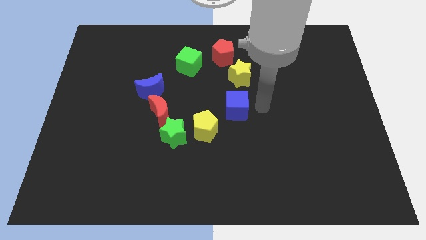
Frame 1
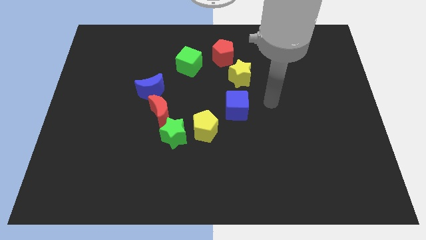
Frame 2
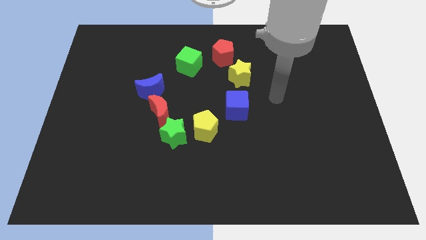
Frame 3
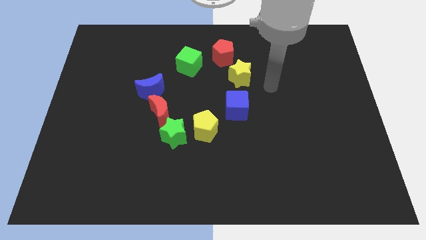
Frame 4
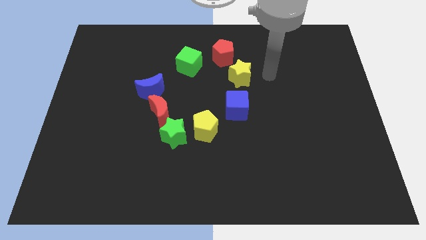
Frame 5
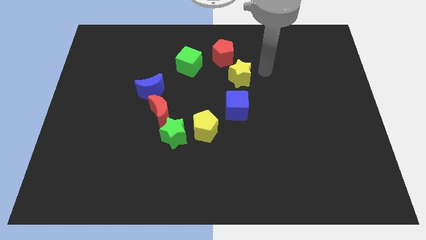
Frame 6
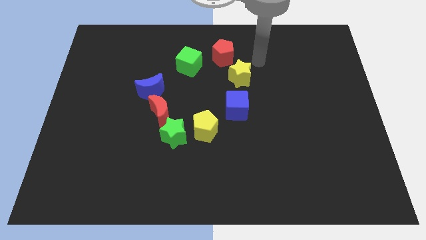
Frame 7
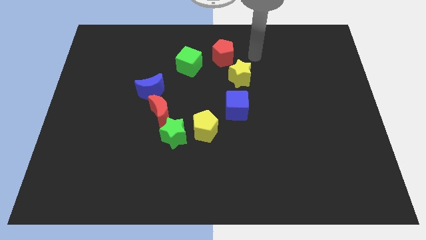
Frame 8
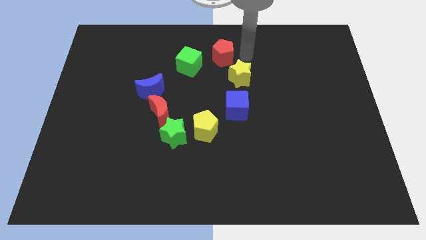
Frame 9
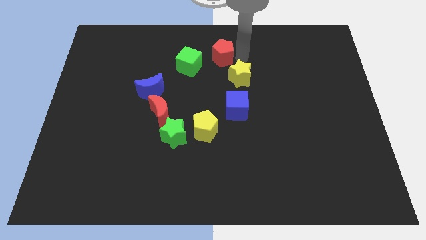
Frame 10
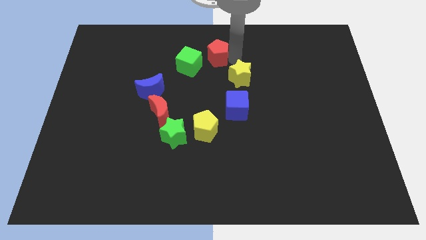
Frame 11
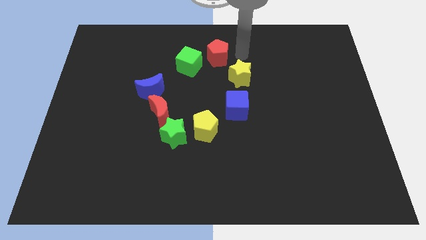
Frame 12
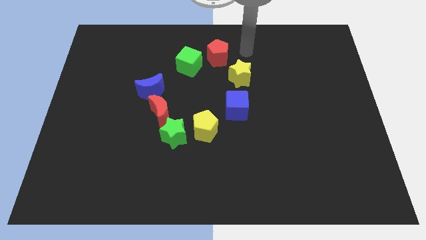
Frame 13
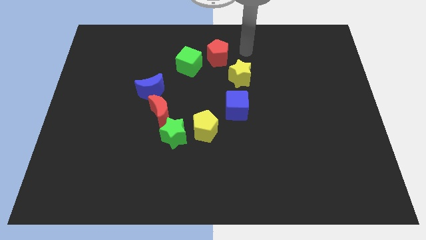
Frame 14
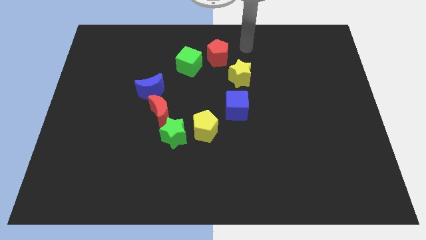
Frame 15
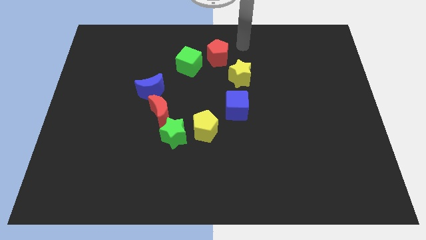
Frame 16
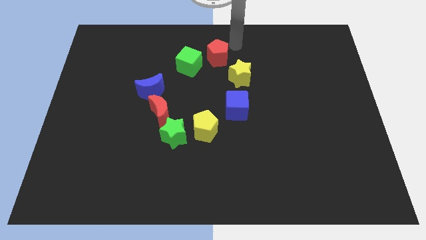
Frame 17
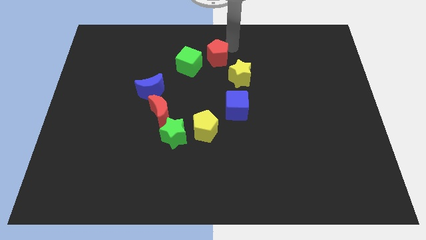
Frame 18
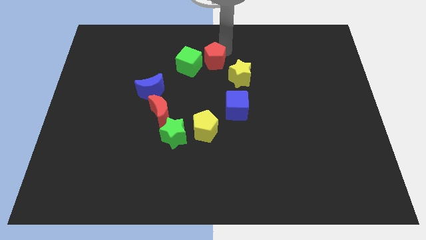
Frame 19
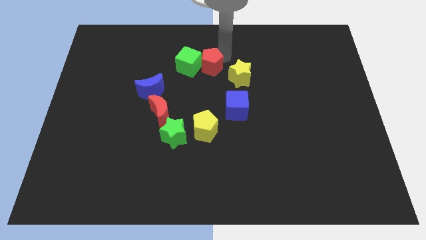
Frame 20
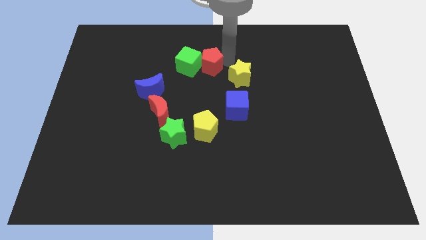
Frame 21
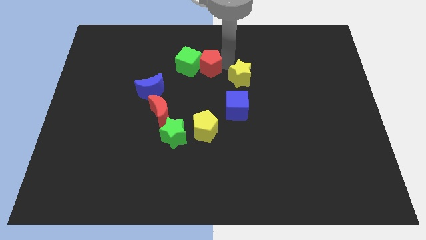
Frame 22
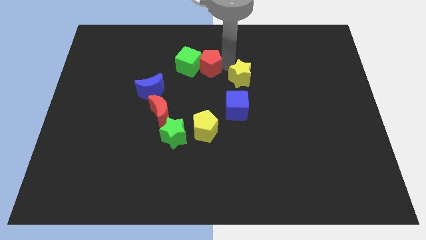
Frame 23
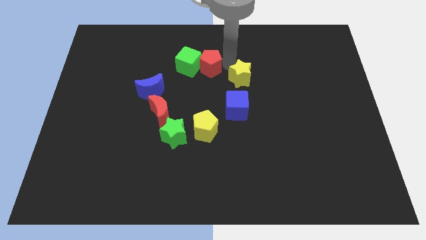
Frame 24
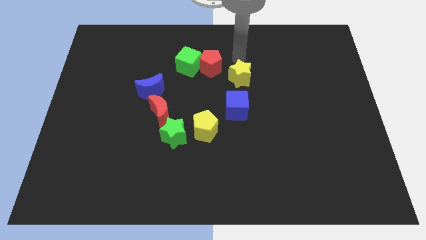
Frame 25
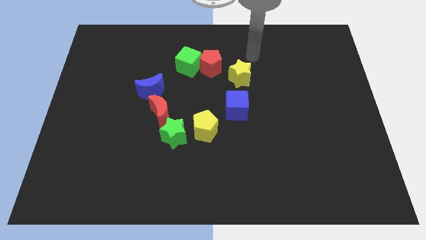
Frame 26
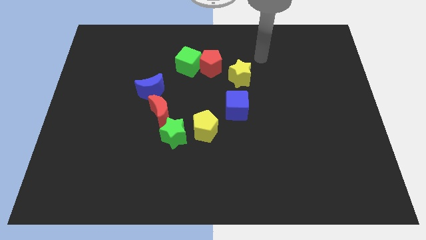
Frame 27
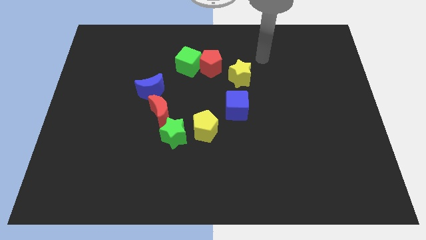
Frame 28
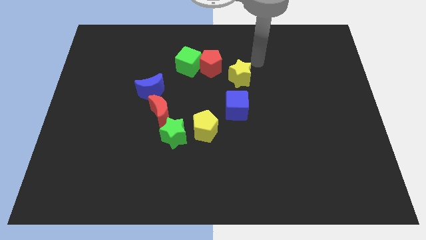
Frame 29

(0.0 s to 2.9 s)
push the red pentagon into the green cube

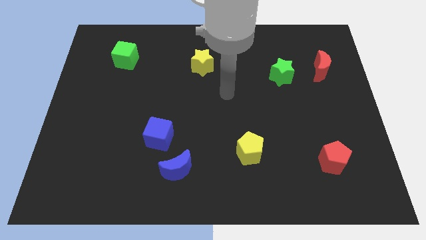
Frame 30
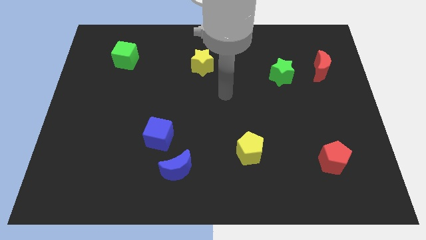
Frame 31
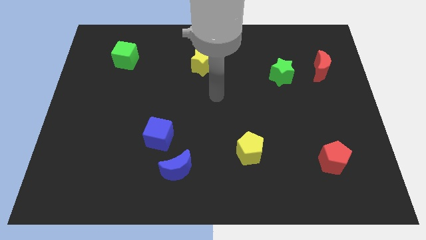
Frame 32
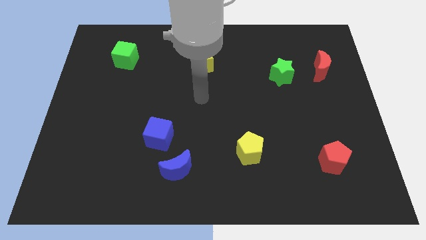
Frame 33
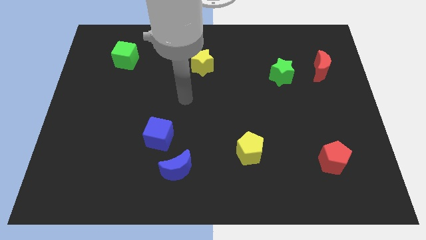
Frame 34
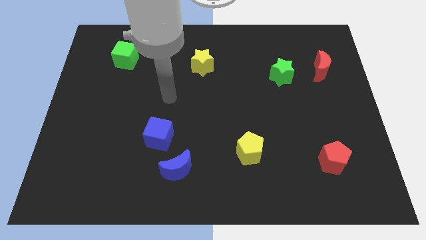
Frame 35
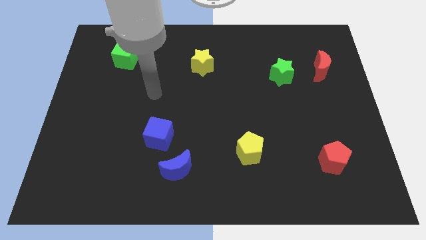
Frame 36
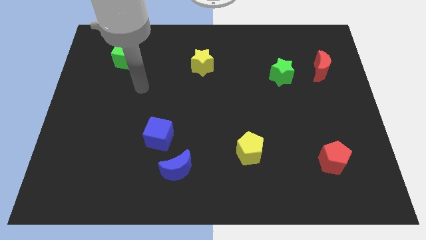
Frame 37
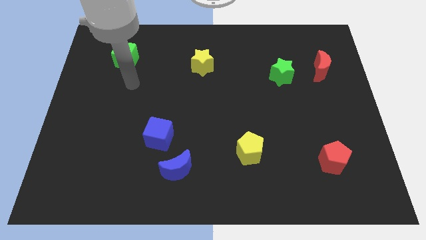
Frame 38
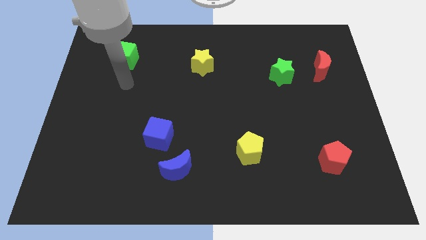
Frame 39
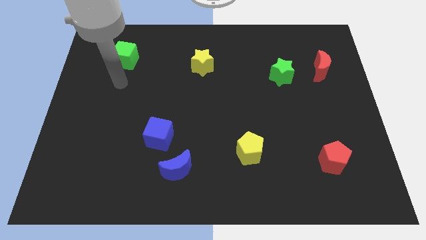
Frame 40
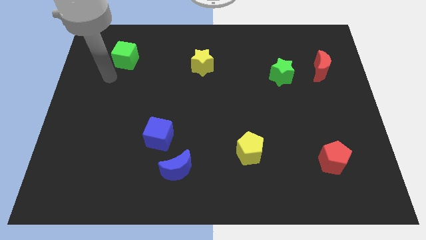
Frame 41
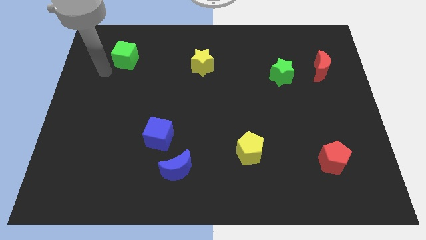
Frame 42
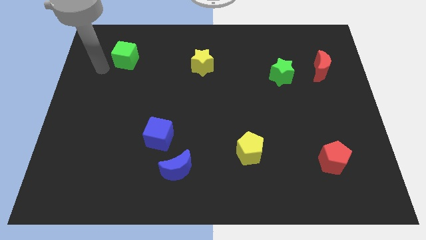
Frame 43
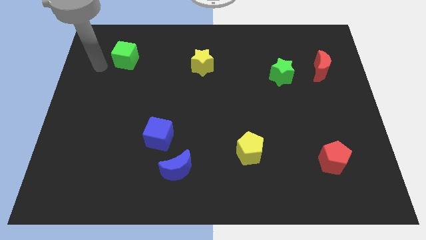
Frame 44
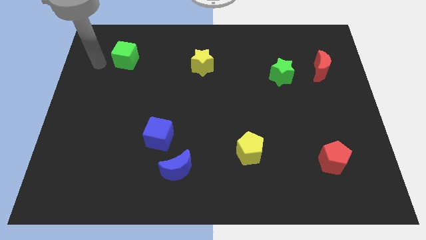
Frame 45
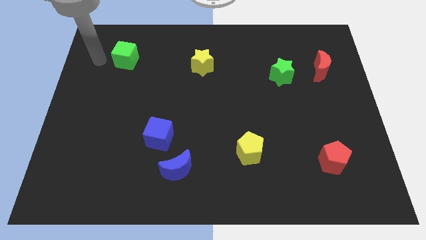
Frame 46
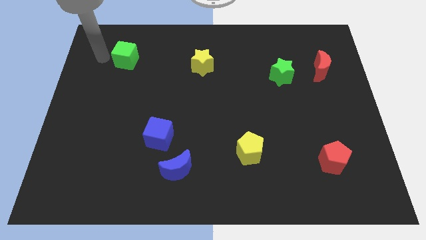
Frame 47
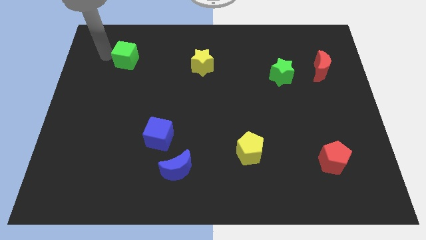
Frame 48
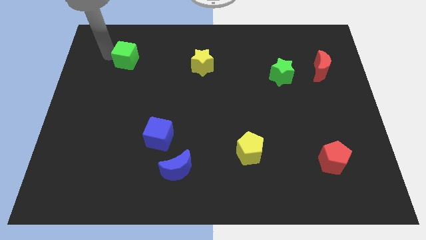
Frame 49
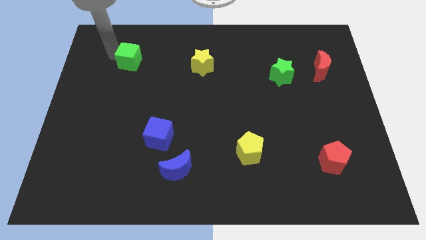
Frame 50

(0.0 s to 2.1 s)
move the green cube towards the center of the board

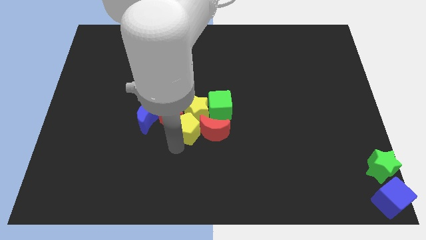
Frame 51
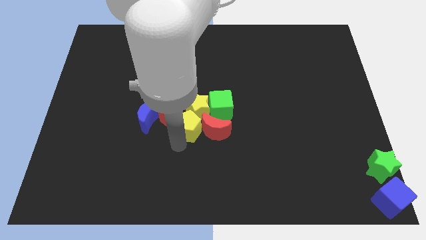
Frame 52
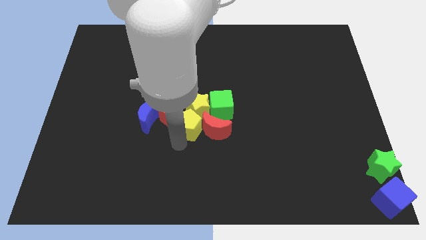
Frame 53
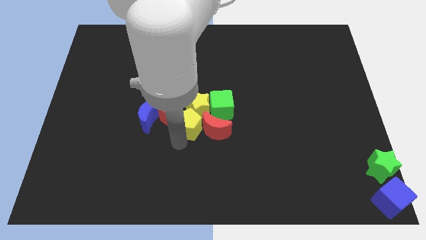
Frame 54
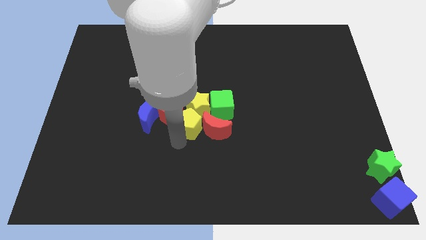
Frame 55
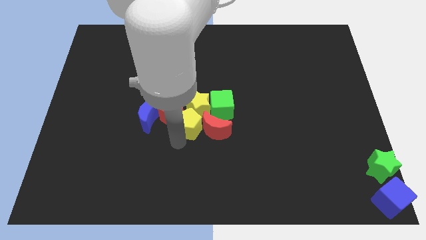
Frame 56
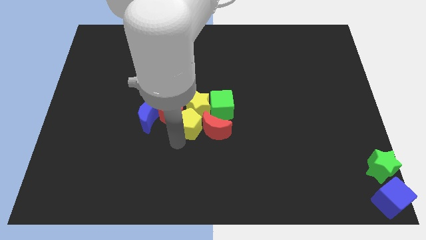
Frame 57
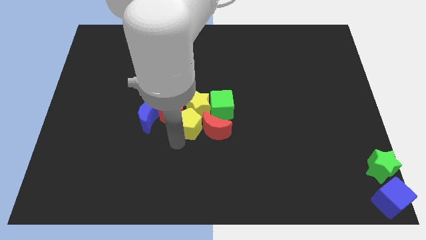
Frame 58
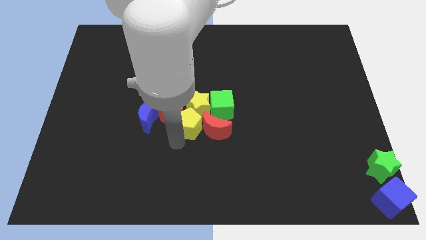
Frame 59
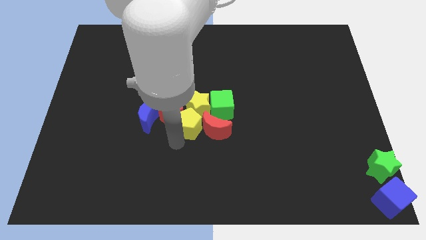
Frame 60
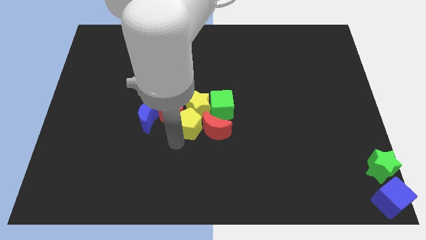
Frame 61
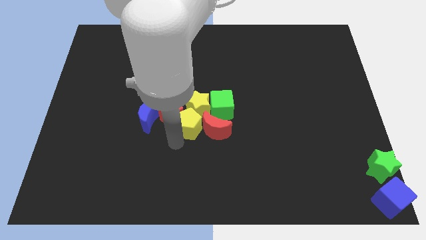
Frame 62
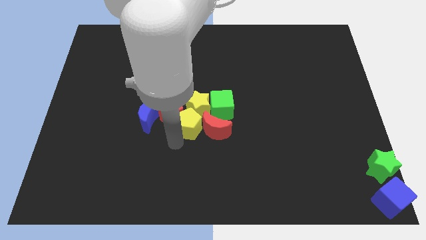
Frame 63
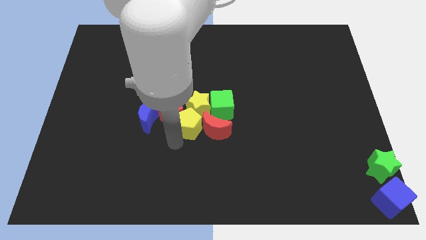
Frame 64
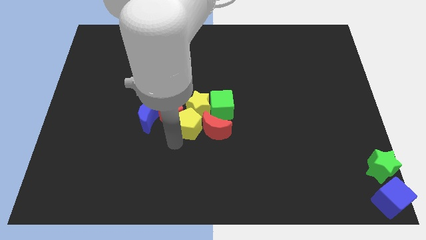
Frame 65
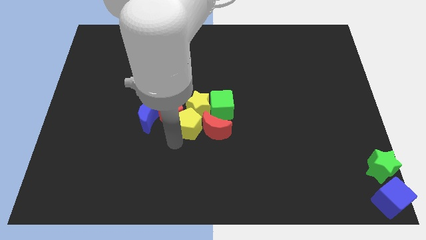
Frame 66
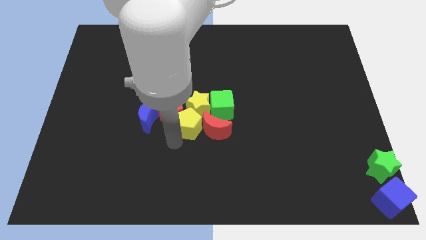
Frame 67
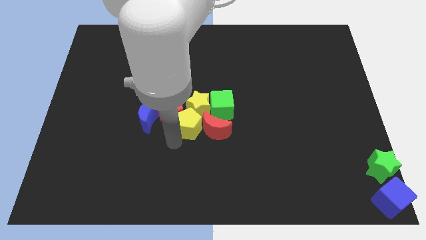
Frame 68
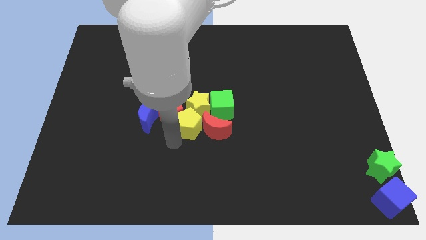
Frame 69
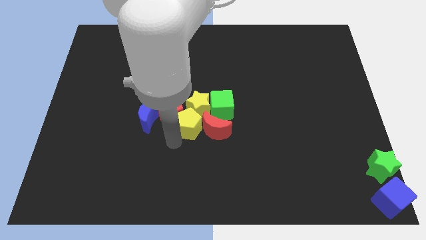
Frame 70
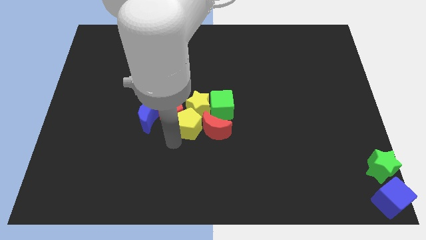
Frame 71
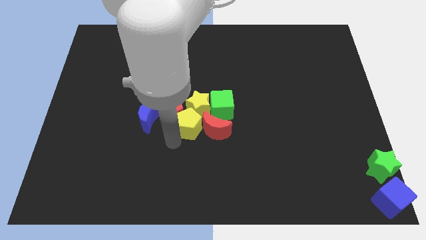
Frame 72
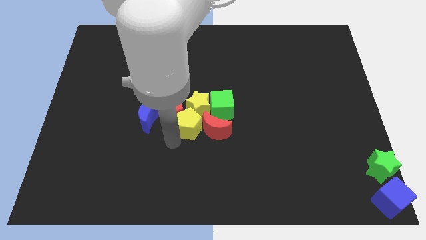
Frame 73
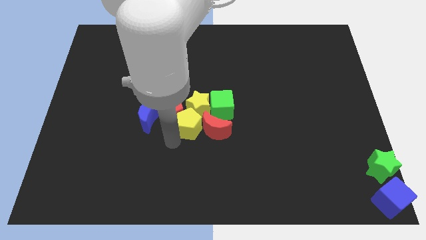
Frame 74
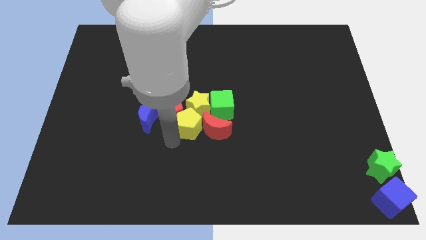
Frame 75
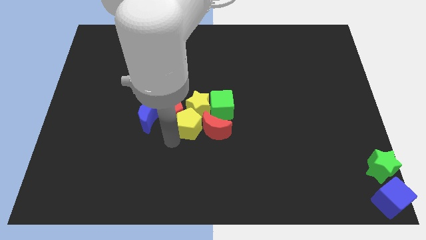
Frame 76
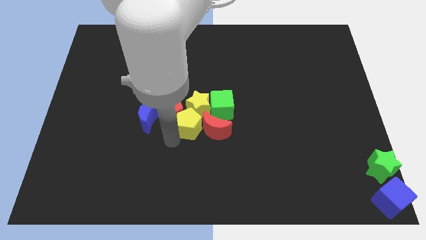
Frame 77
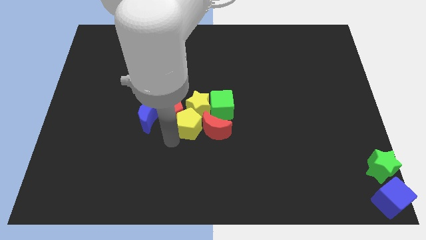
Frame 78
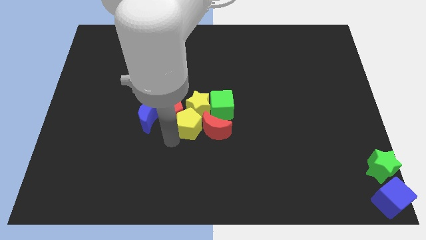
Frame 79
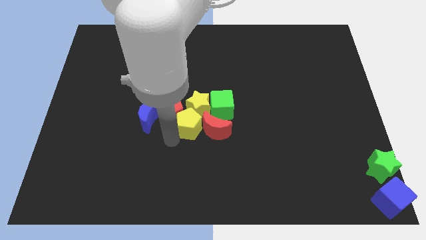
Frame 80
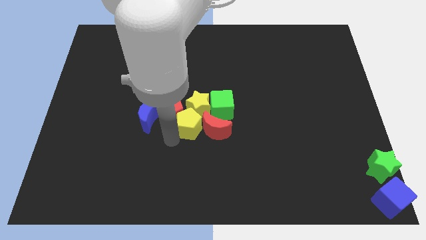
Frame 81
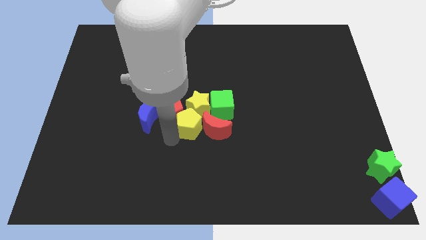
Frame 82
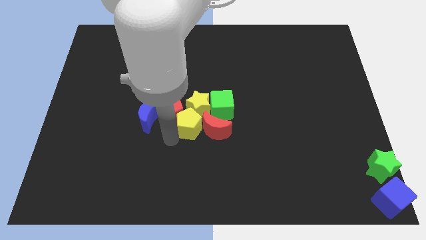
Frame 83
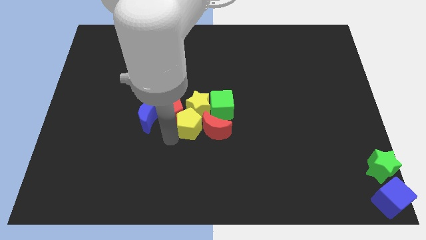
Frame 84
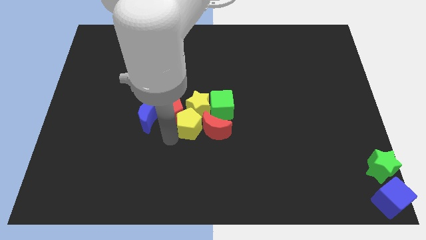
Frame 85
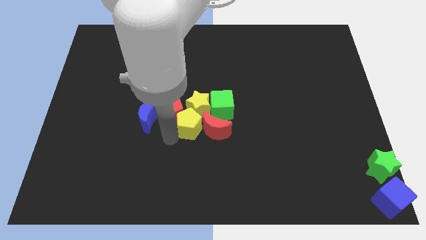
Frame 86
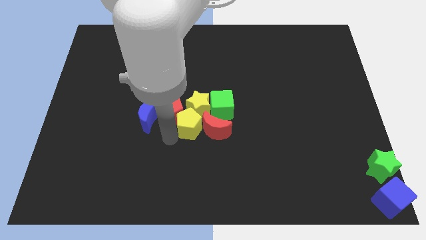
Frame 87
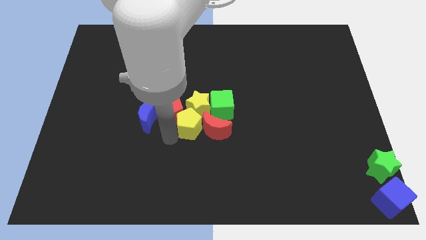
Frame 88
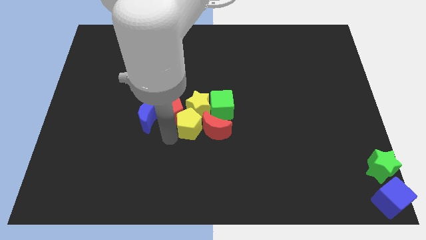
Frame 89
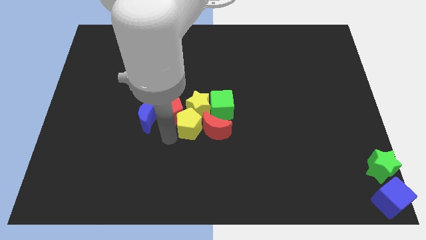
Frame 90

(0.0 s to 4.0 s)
point your arm at the bottom left of the yellow pentagon
